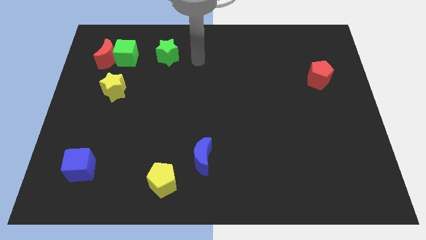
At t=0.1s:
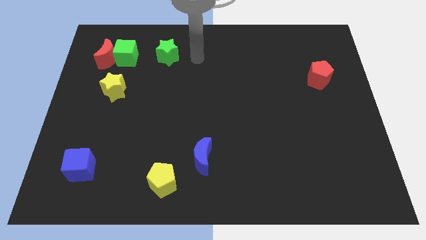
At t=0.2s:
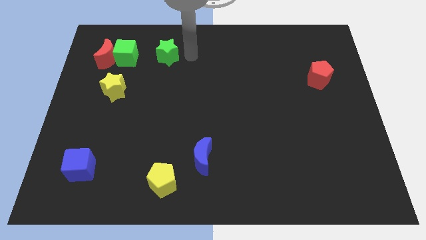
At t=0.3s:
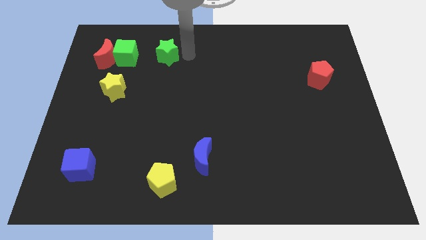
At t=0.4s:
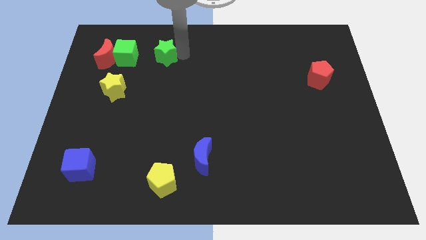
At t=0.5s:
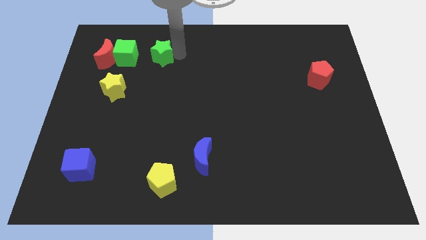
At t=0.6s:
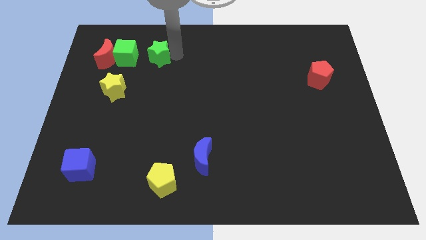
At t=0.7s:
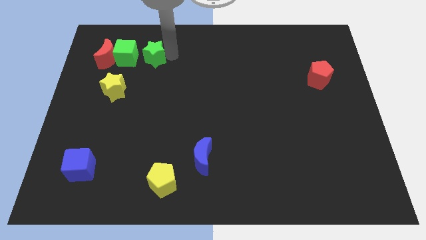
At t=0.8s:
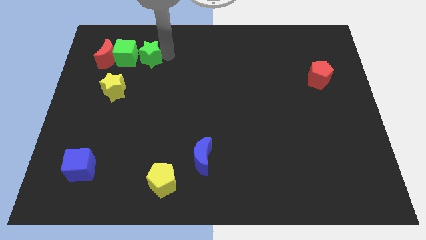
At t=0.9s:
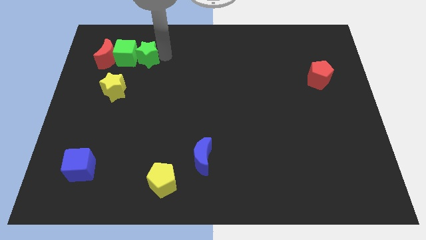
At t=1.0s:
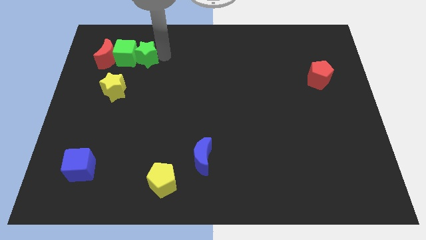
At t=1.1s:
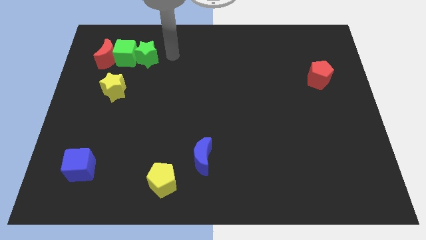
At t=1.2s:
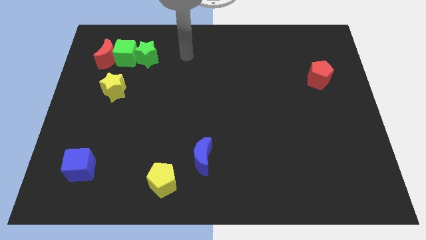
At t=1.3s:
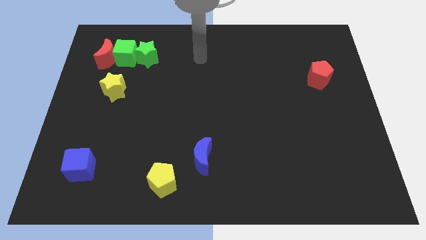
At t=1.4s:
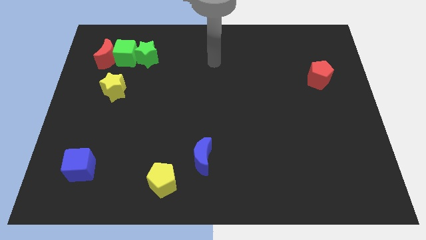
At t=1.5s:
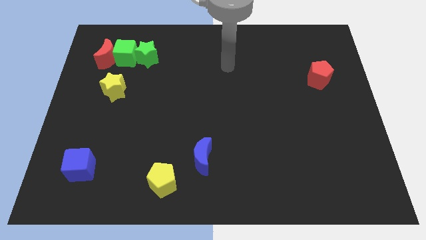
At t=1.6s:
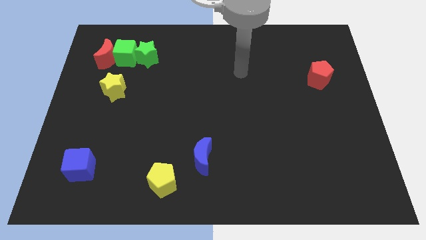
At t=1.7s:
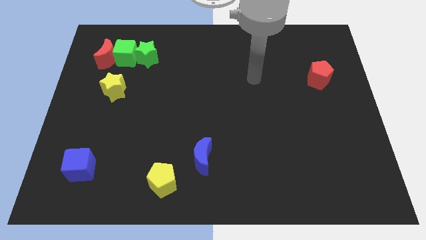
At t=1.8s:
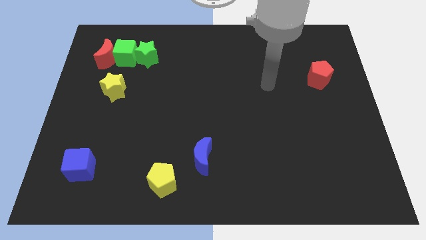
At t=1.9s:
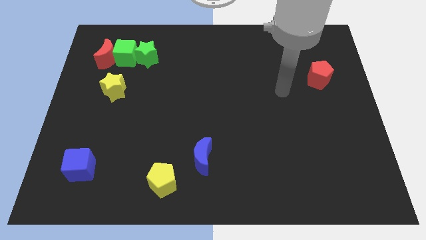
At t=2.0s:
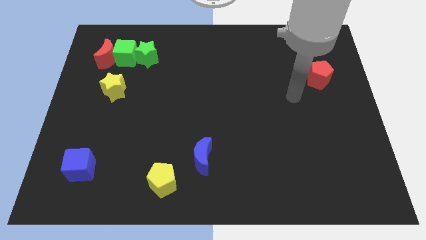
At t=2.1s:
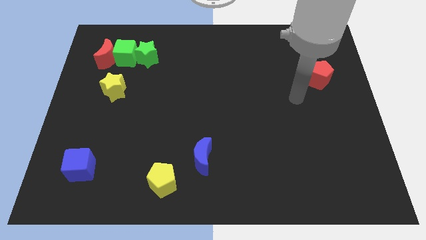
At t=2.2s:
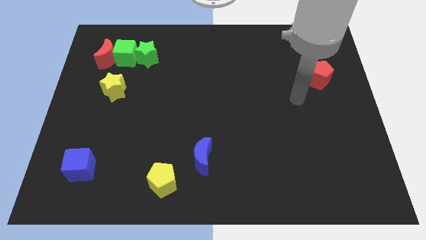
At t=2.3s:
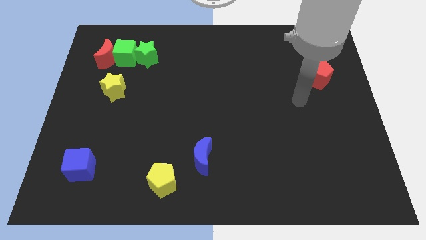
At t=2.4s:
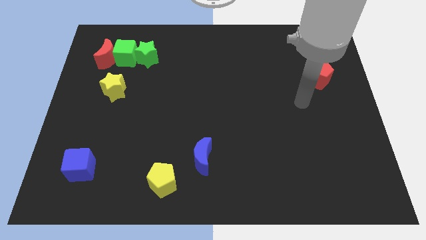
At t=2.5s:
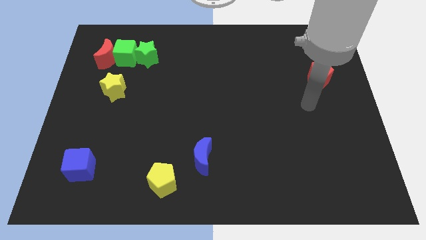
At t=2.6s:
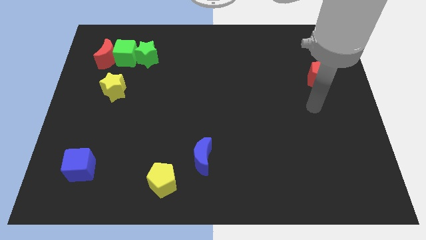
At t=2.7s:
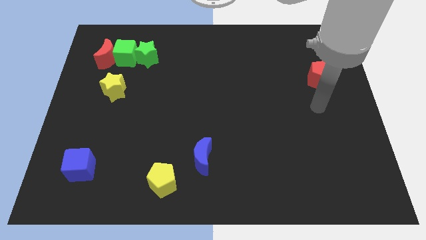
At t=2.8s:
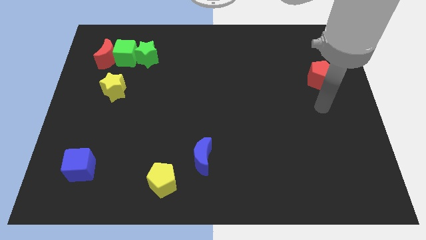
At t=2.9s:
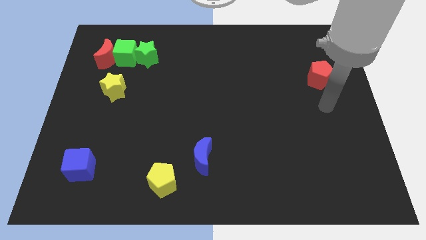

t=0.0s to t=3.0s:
place your arm at the bottom of the red pentagon

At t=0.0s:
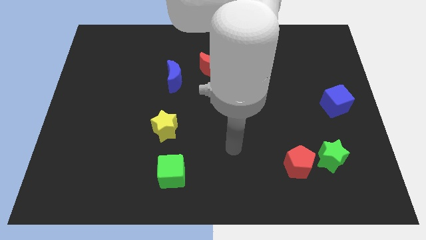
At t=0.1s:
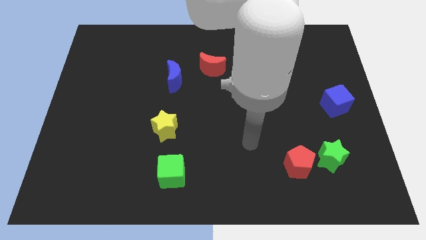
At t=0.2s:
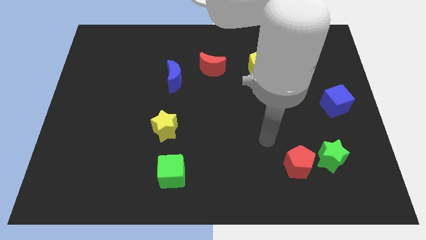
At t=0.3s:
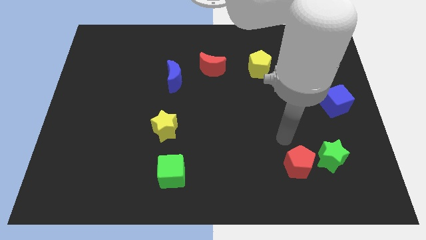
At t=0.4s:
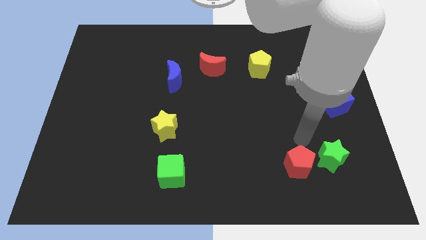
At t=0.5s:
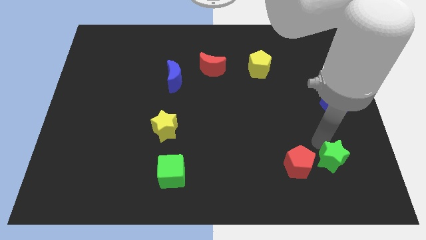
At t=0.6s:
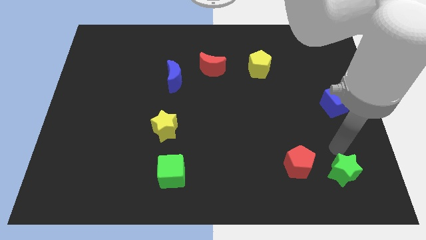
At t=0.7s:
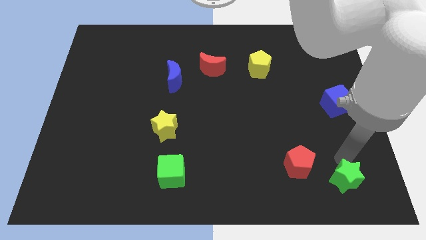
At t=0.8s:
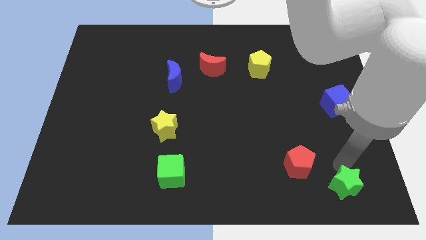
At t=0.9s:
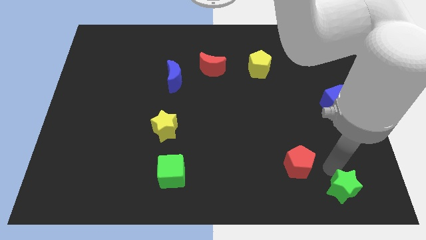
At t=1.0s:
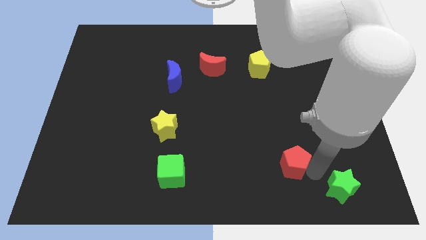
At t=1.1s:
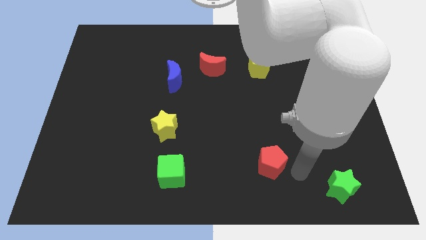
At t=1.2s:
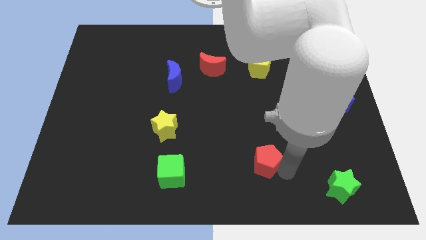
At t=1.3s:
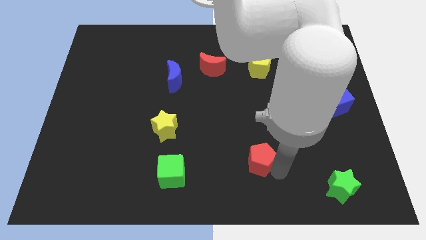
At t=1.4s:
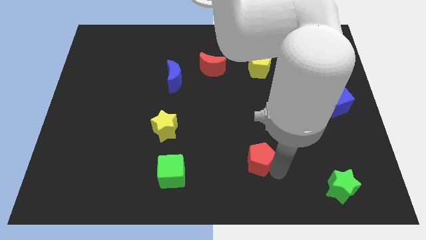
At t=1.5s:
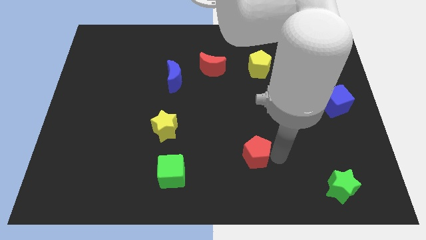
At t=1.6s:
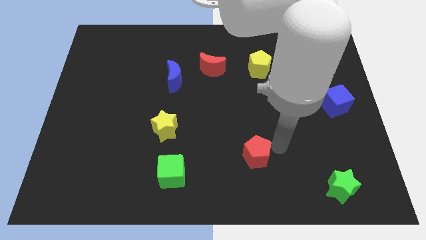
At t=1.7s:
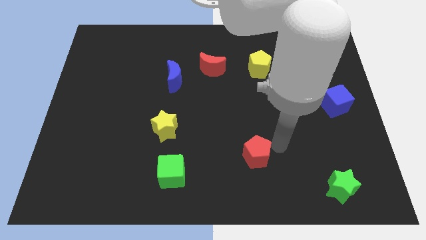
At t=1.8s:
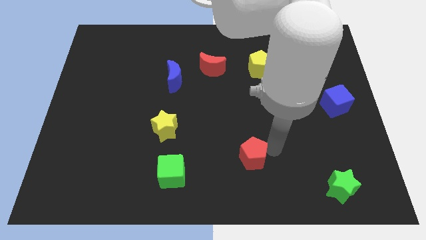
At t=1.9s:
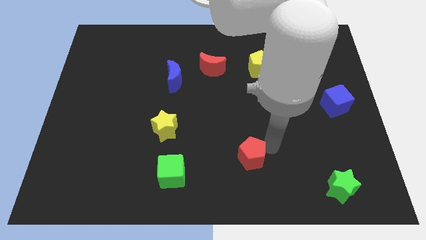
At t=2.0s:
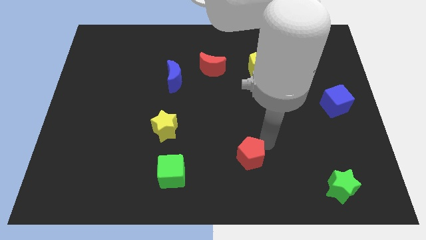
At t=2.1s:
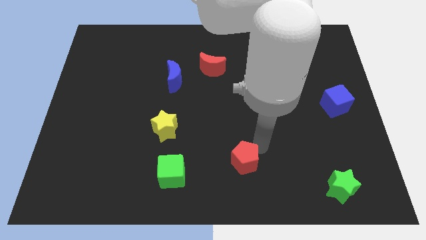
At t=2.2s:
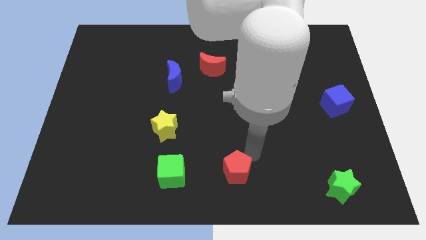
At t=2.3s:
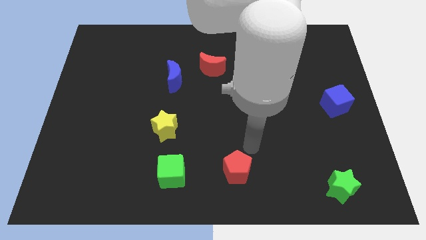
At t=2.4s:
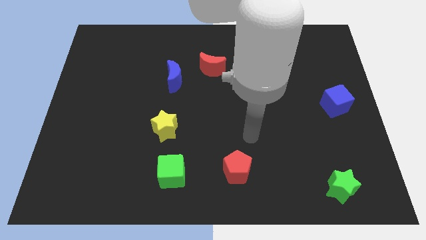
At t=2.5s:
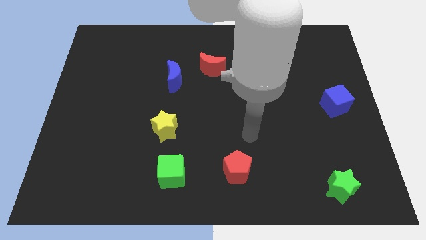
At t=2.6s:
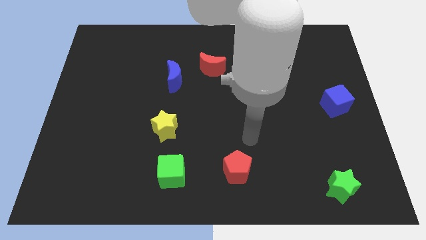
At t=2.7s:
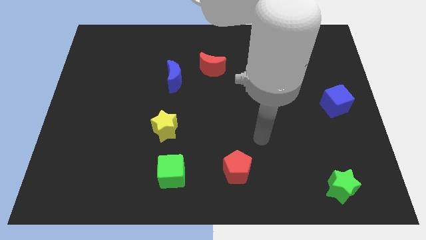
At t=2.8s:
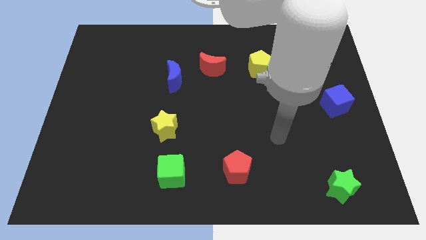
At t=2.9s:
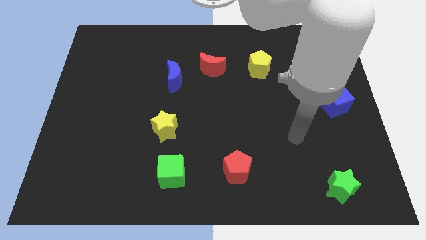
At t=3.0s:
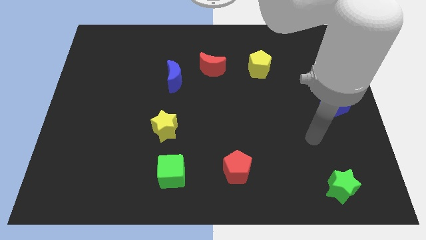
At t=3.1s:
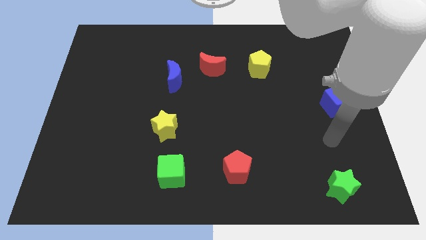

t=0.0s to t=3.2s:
separate red pentagon and green star

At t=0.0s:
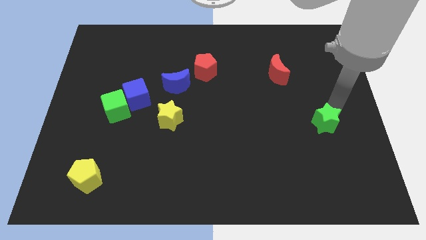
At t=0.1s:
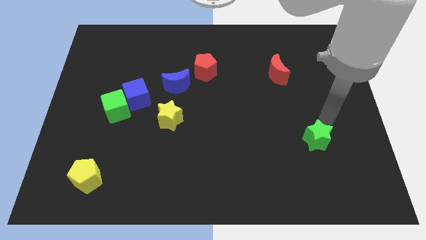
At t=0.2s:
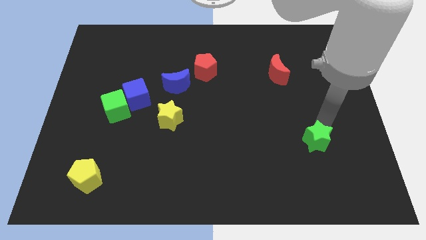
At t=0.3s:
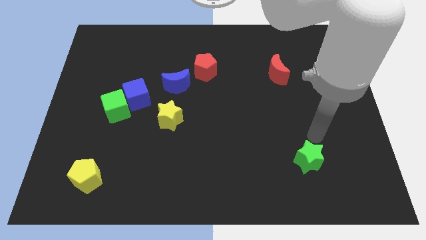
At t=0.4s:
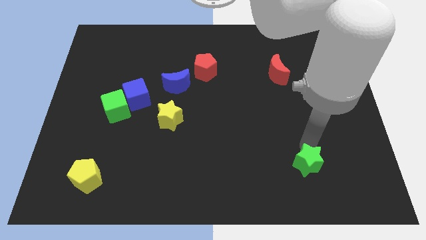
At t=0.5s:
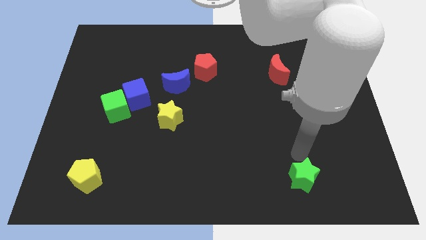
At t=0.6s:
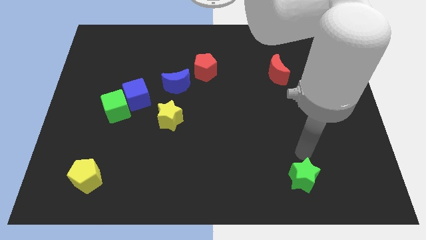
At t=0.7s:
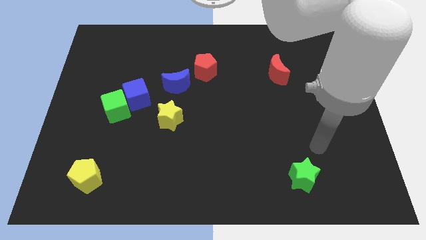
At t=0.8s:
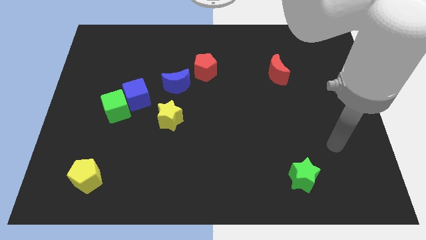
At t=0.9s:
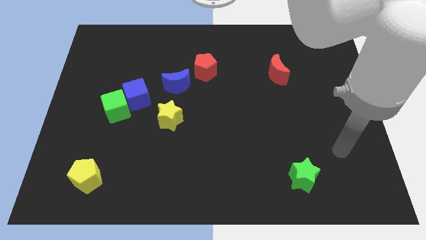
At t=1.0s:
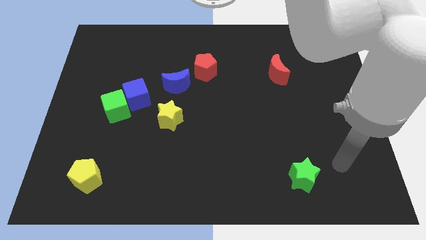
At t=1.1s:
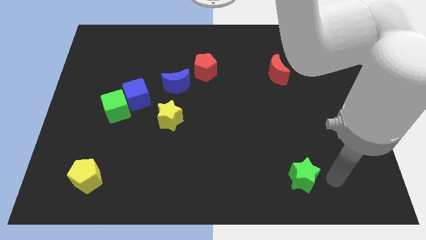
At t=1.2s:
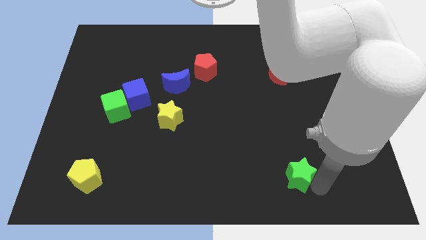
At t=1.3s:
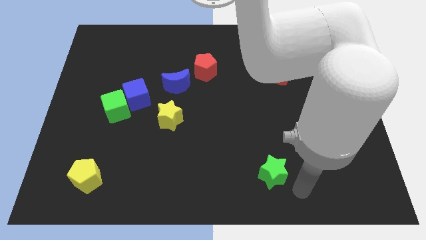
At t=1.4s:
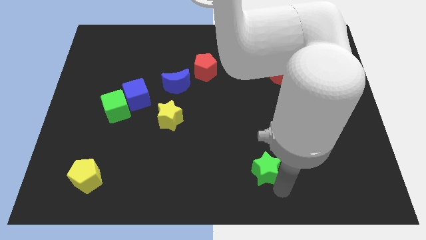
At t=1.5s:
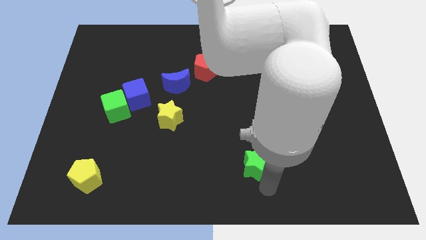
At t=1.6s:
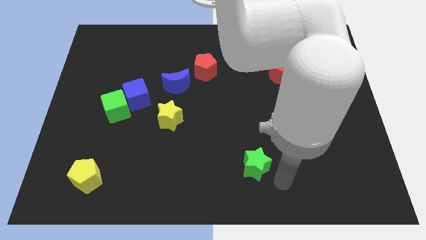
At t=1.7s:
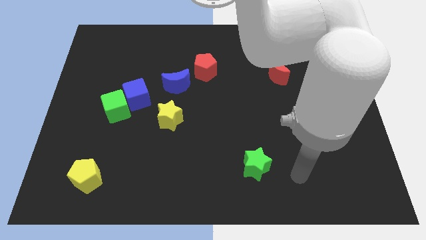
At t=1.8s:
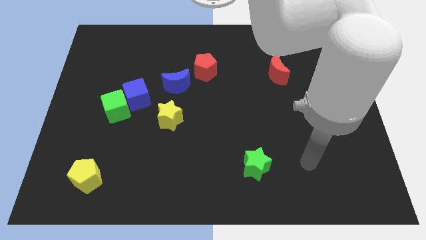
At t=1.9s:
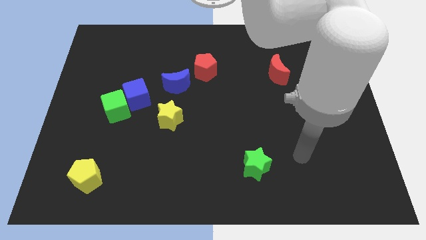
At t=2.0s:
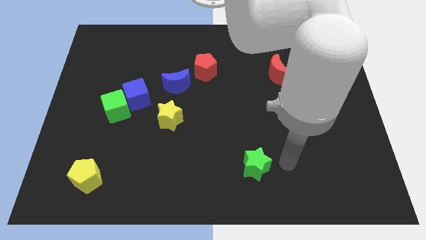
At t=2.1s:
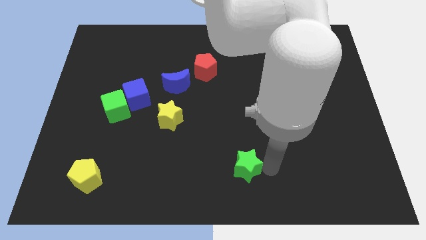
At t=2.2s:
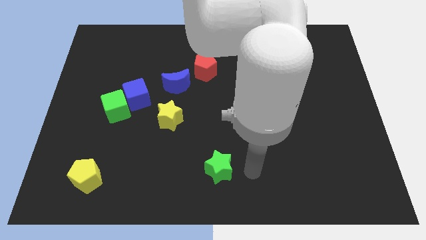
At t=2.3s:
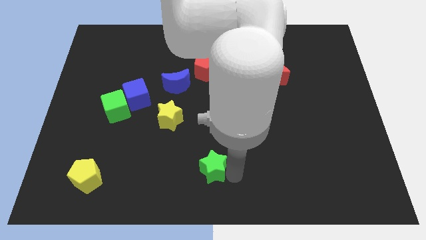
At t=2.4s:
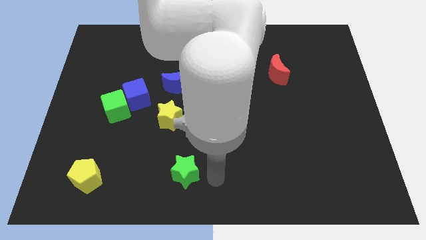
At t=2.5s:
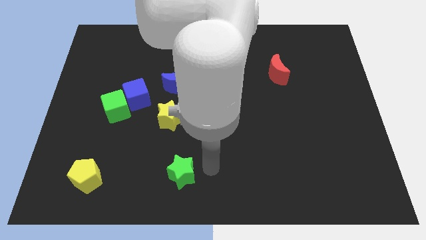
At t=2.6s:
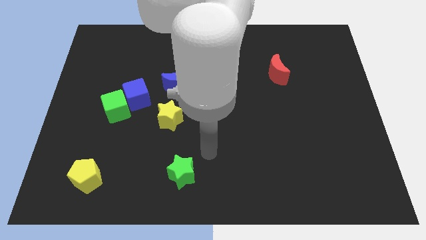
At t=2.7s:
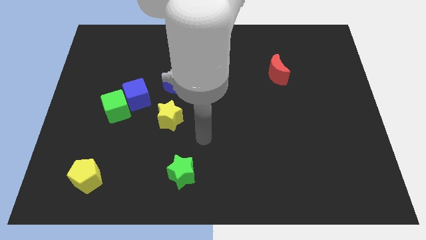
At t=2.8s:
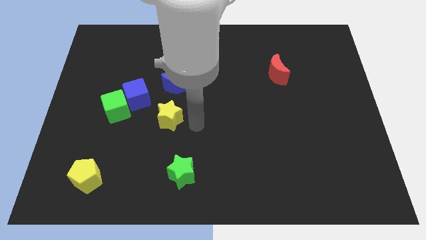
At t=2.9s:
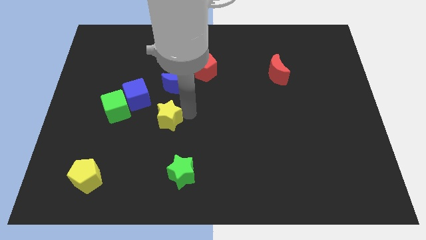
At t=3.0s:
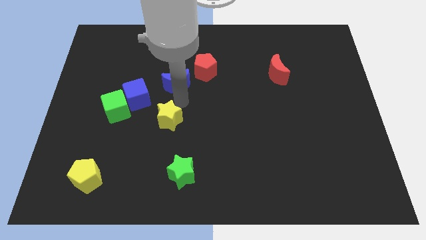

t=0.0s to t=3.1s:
push the green star towards the left side of the board
